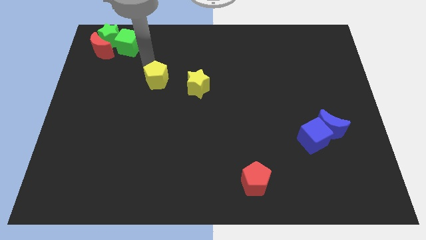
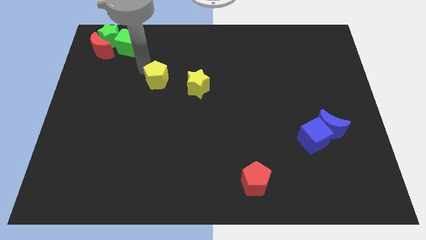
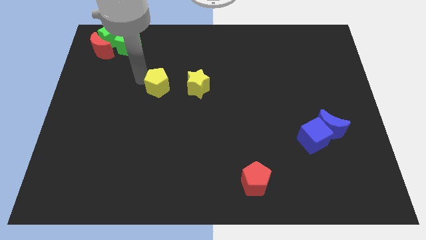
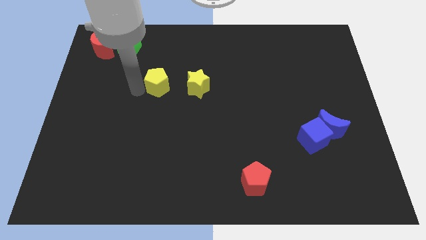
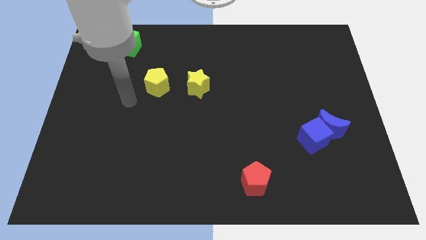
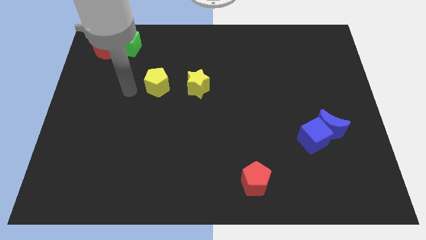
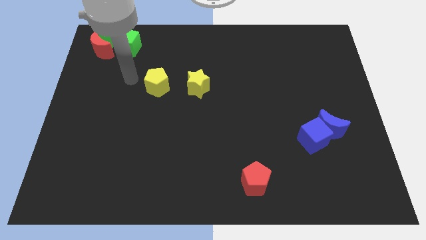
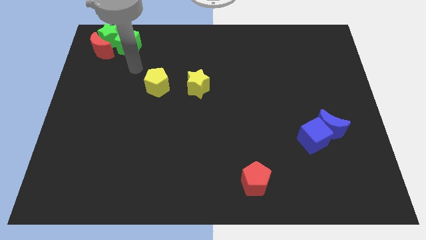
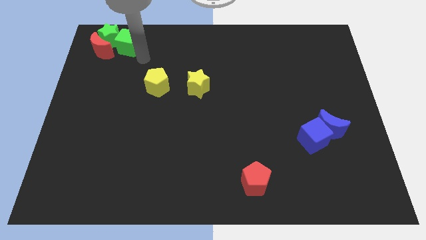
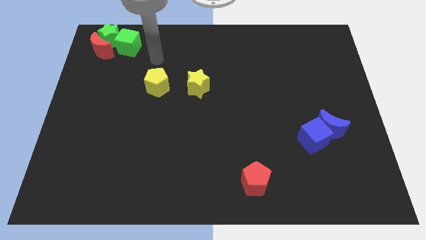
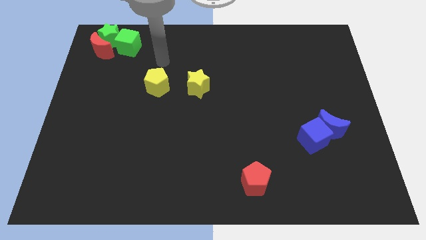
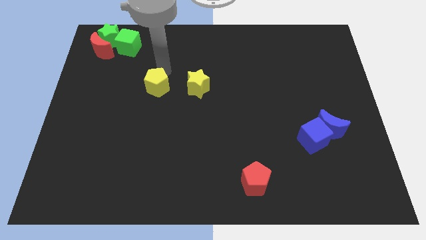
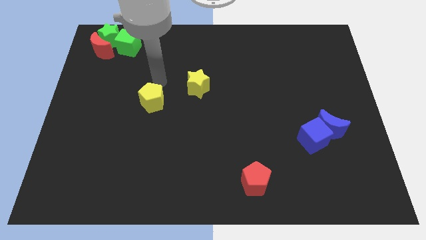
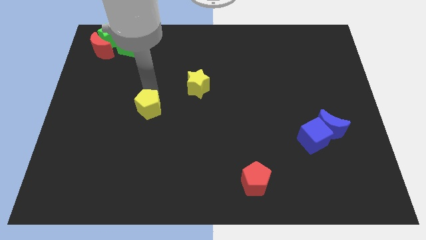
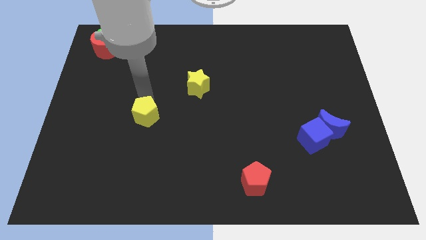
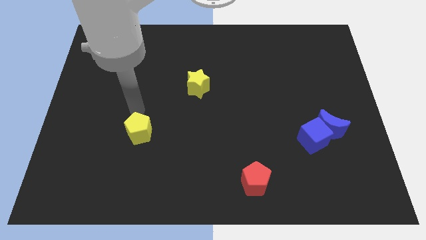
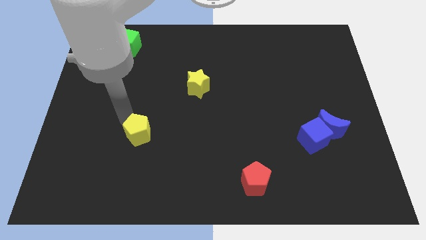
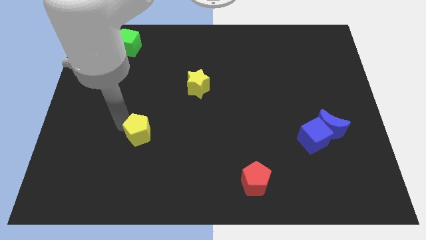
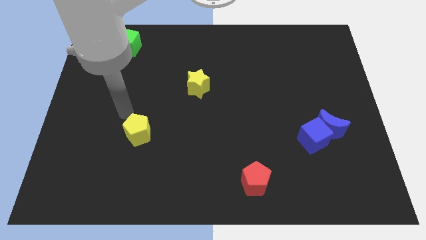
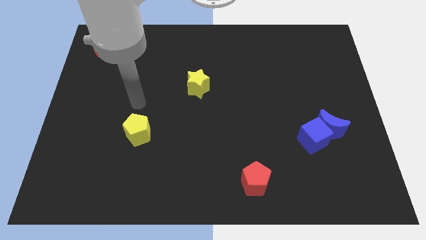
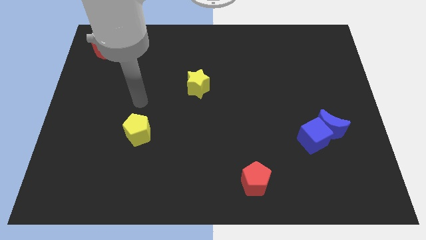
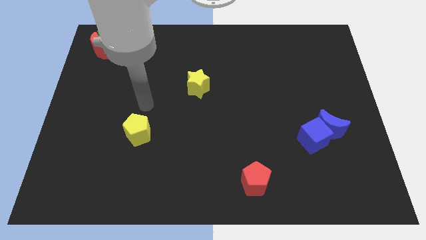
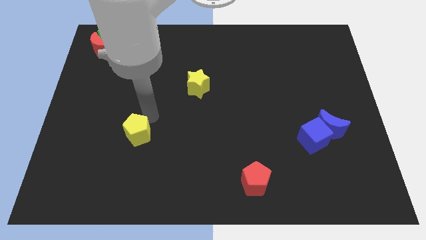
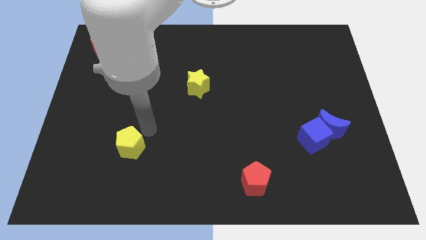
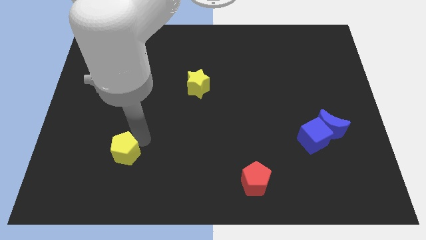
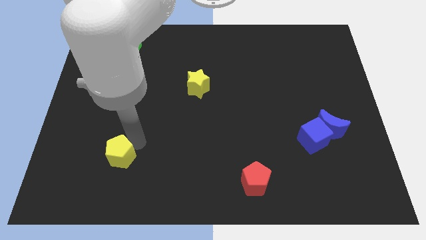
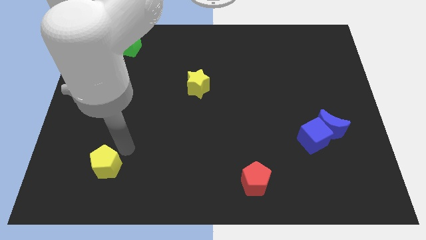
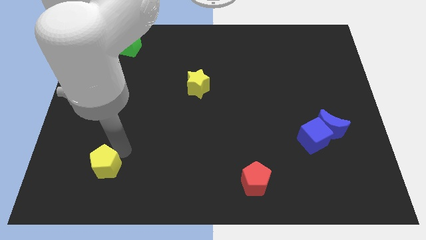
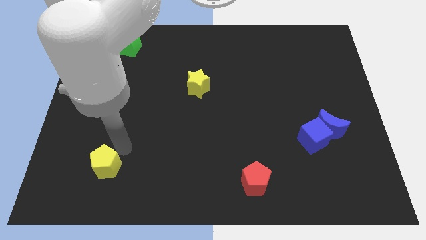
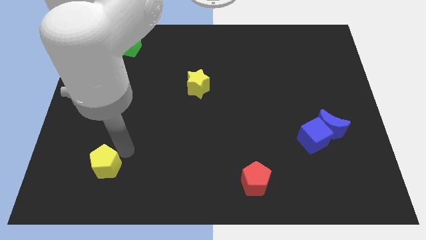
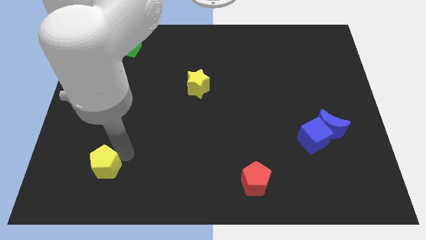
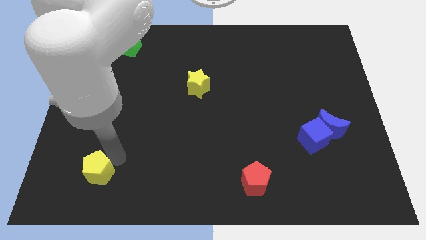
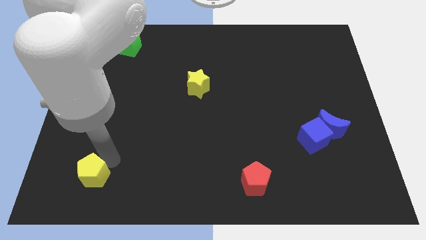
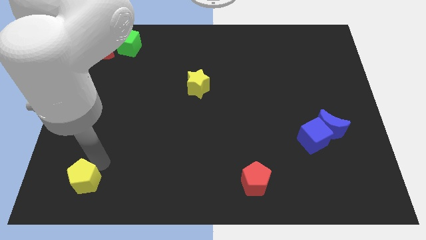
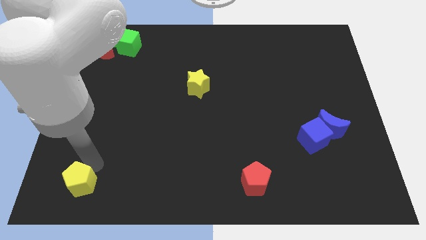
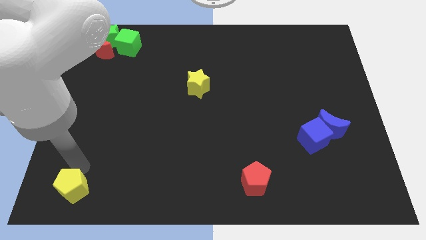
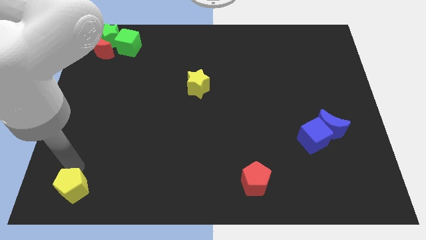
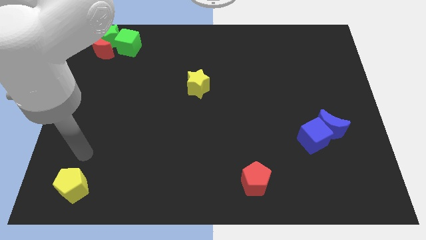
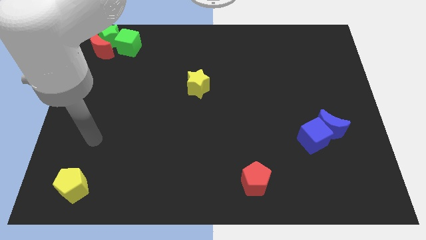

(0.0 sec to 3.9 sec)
push the yellow penatgon to the bottom left side of the board

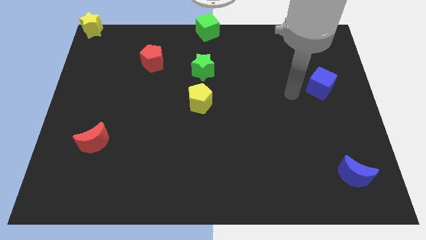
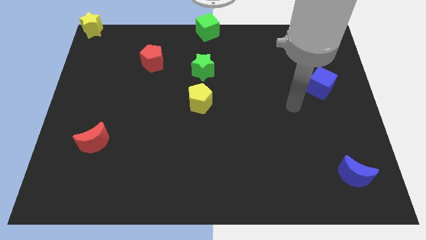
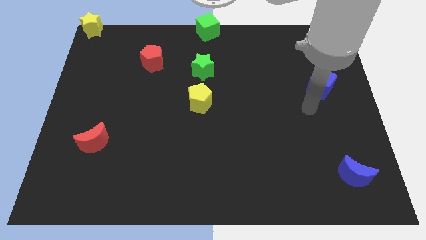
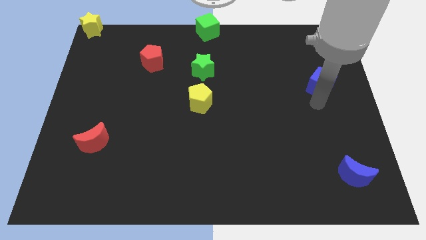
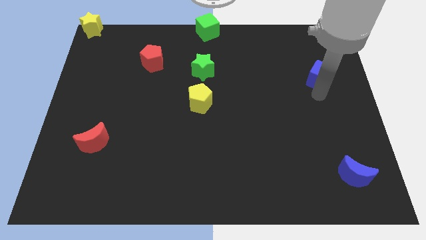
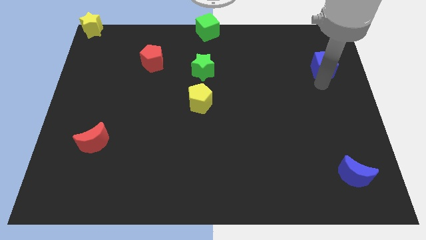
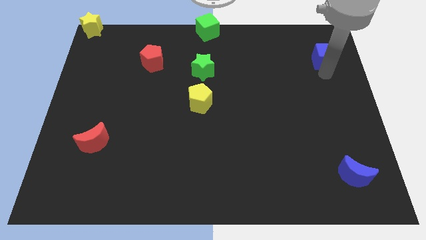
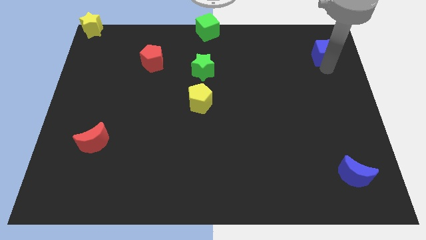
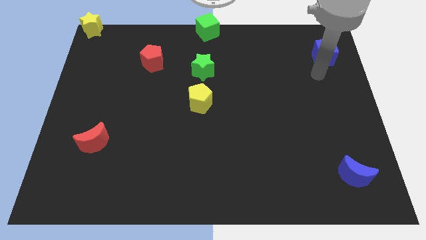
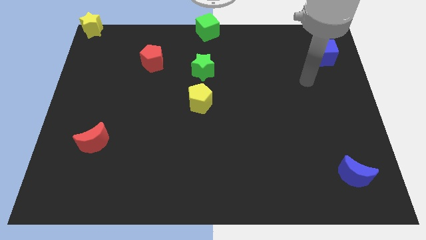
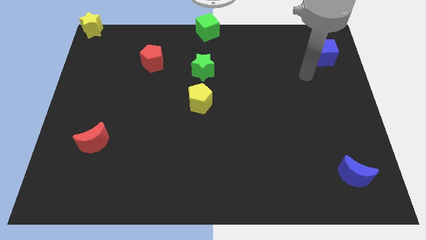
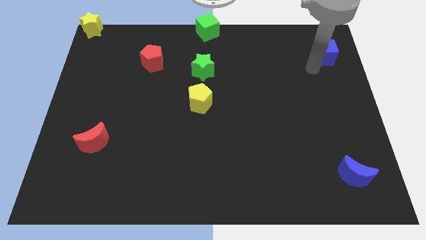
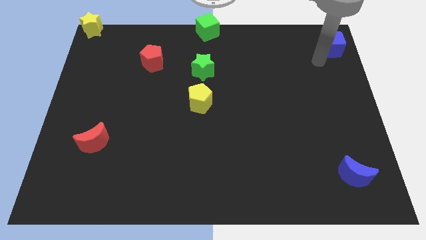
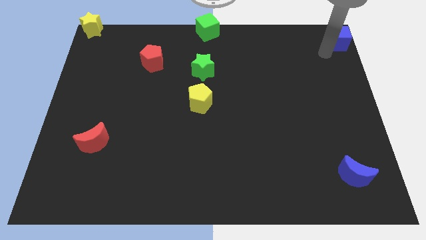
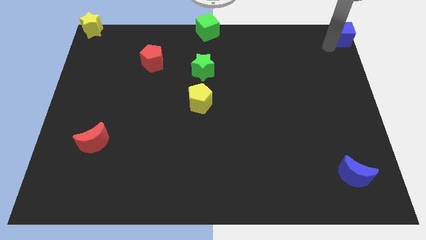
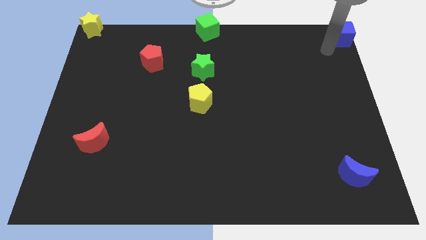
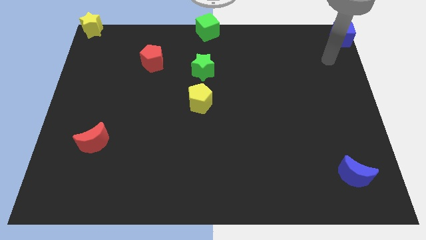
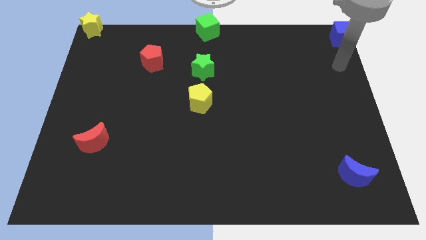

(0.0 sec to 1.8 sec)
put blue cube at the top right corner of the board

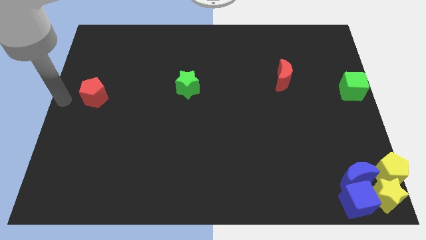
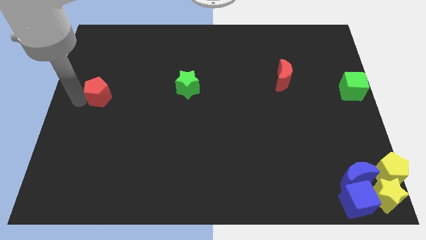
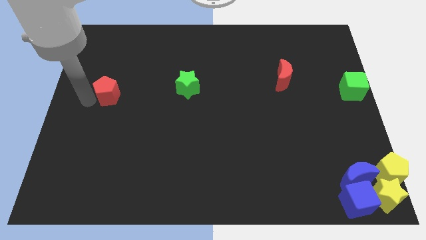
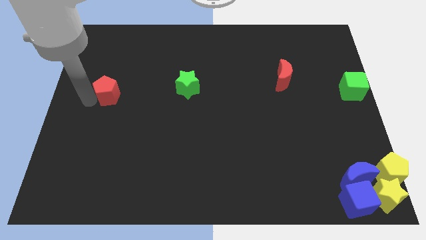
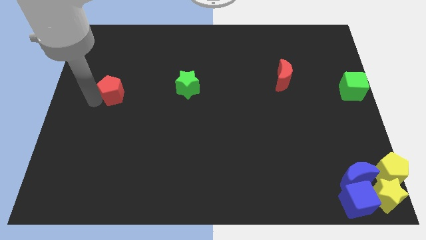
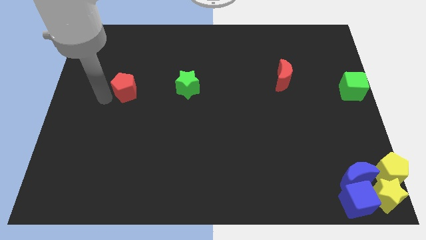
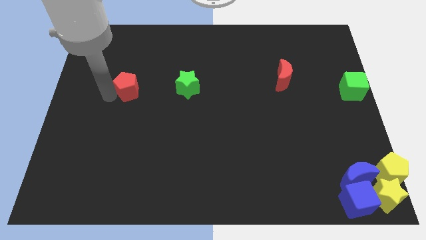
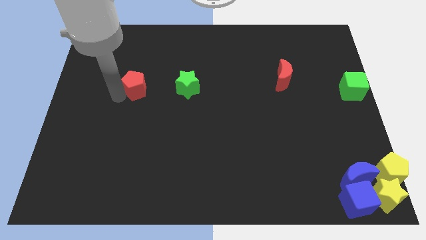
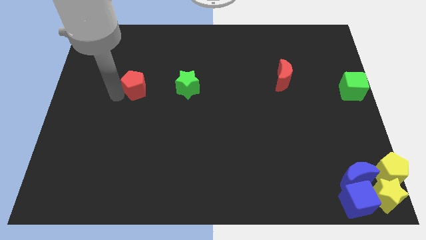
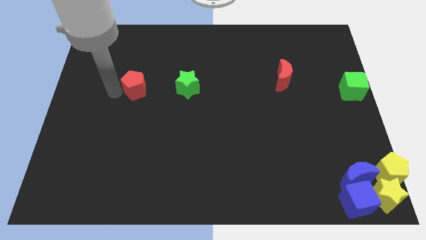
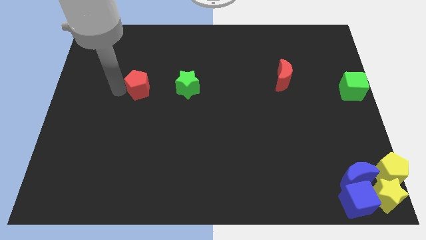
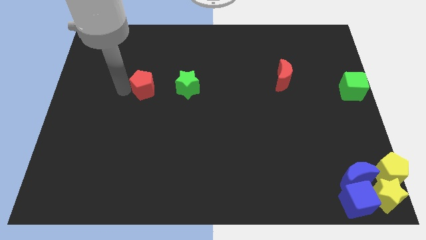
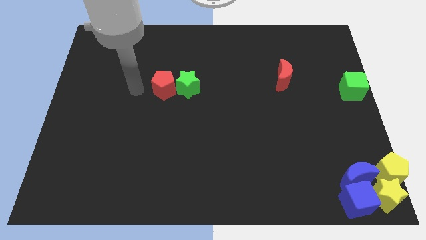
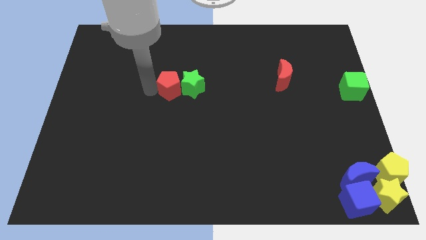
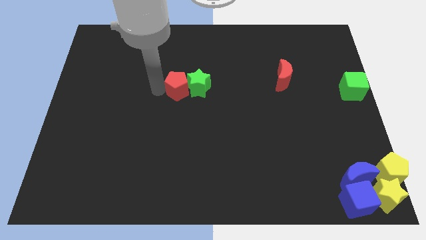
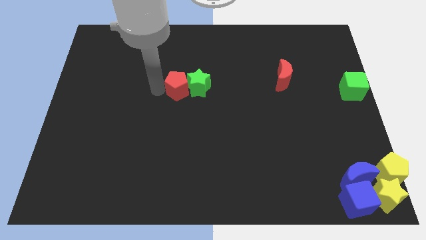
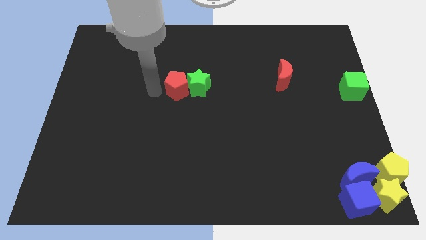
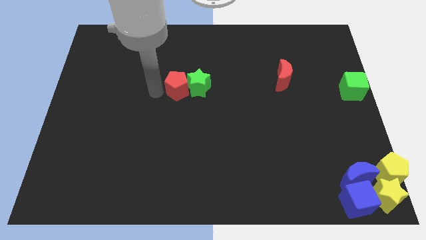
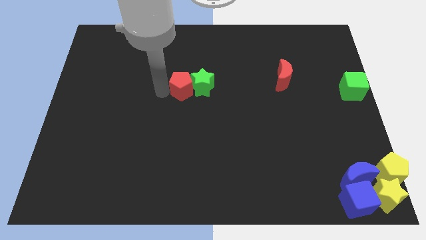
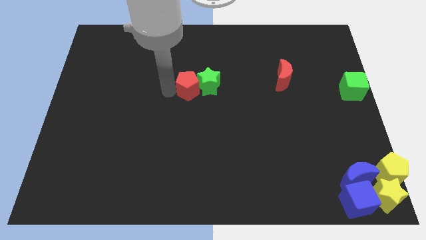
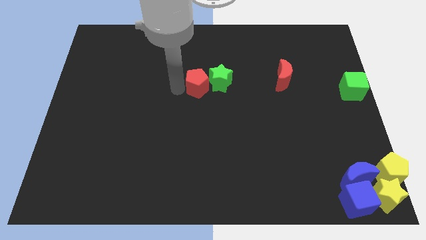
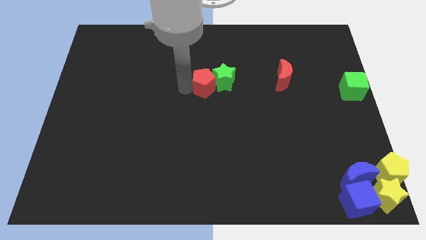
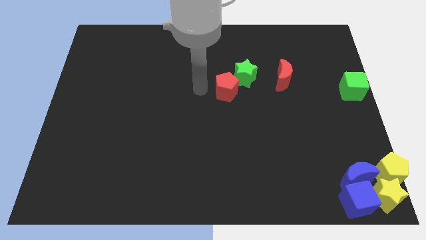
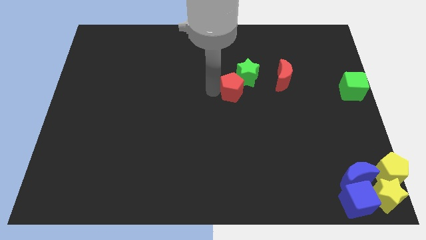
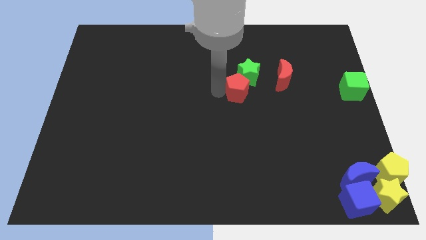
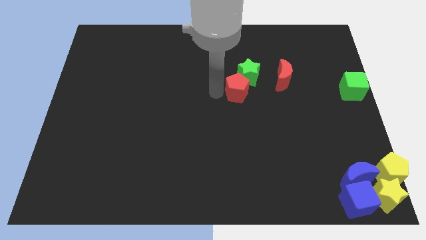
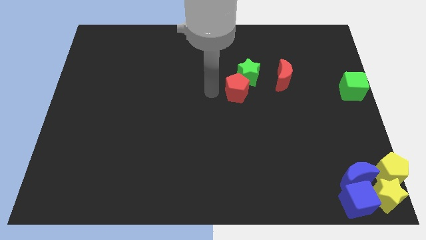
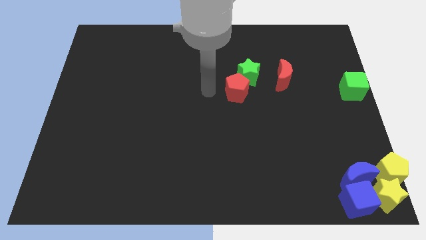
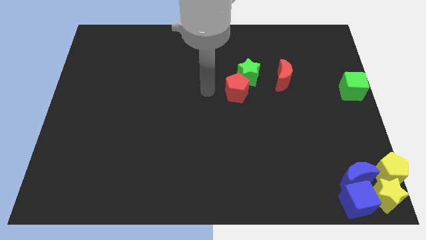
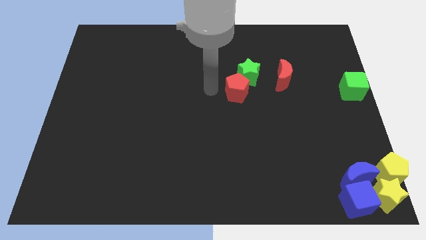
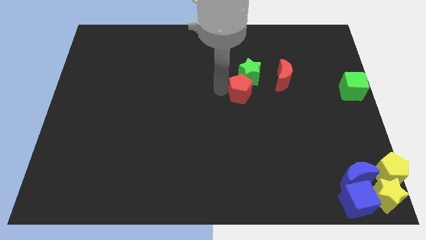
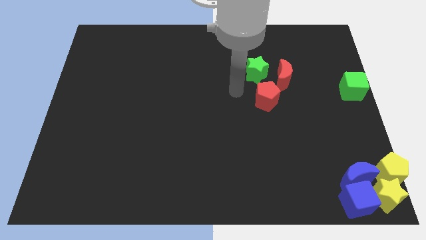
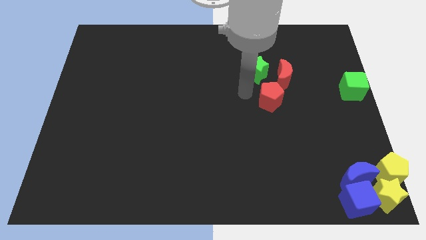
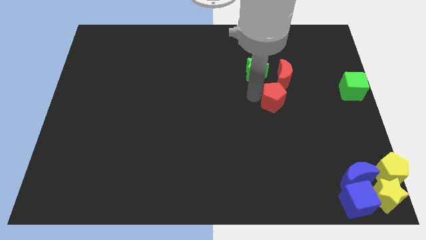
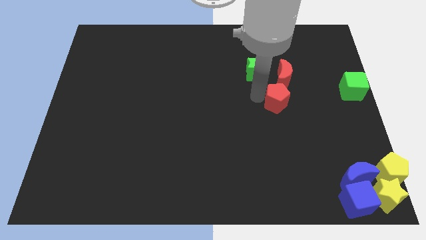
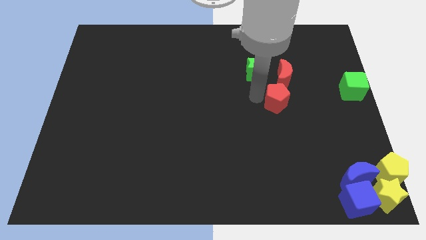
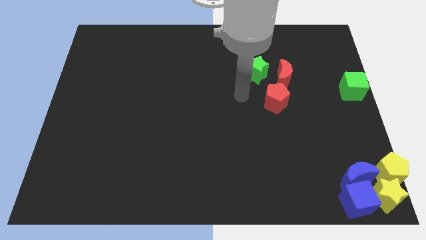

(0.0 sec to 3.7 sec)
move the red pentagon below the red crescent
